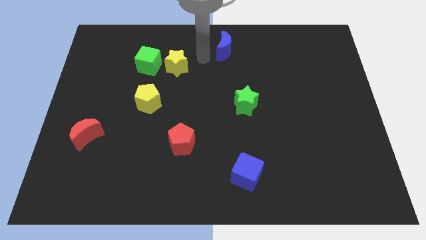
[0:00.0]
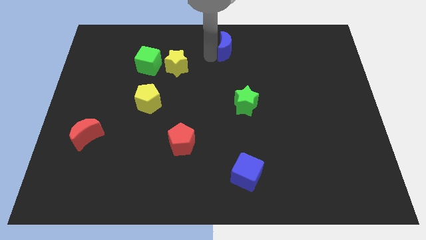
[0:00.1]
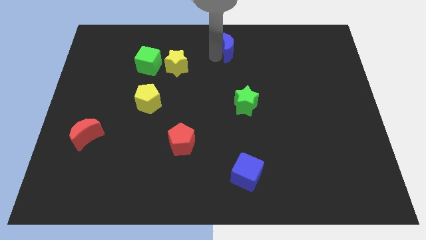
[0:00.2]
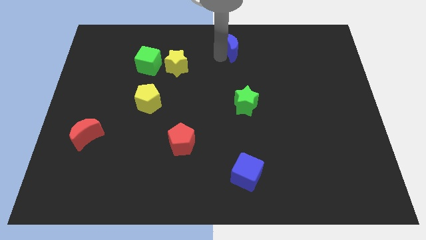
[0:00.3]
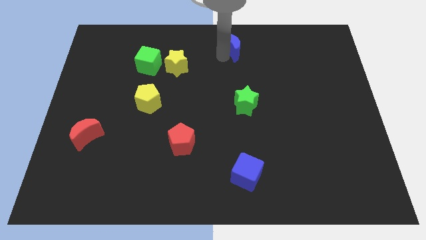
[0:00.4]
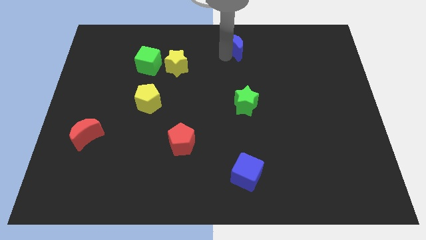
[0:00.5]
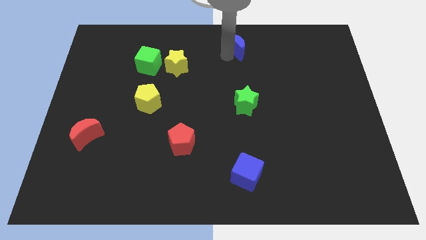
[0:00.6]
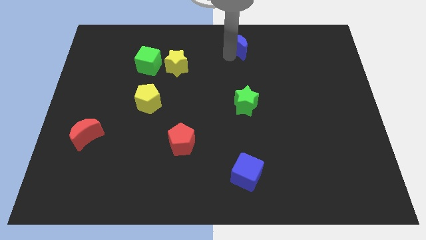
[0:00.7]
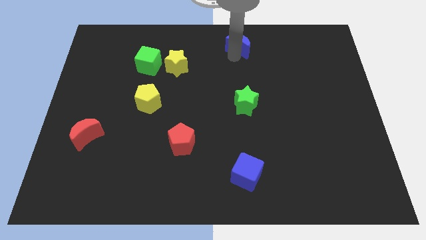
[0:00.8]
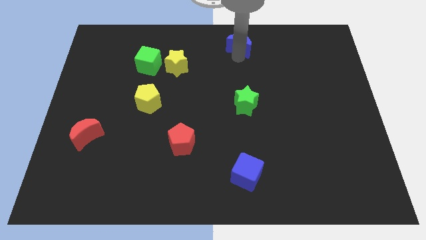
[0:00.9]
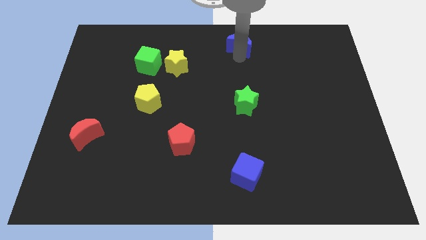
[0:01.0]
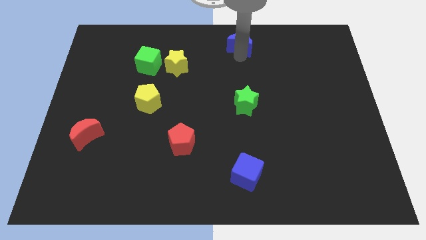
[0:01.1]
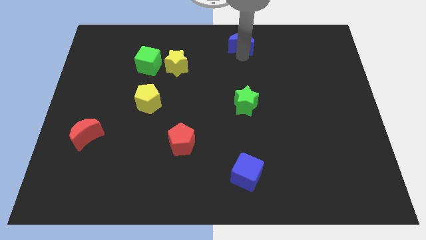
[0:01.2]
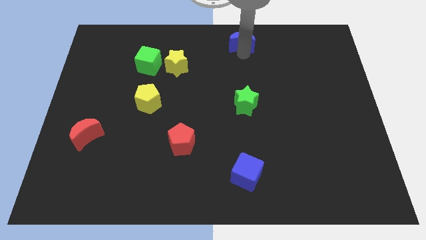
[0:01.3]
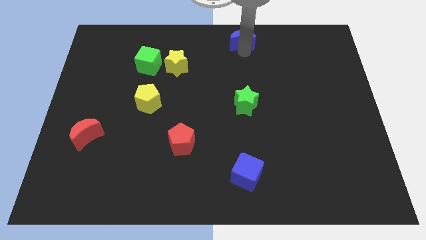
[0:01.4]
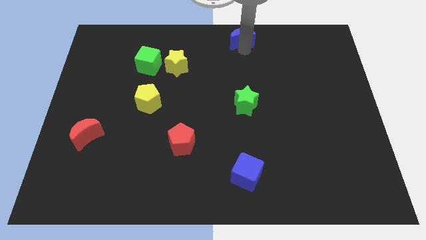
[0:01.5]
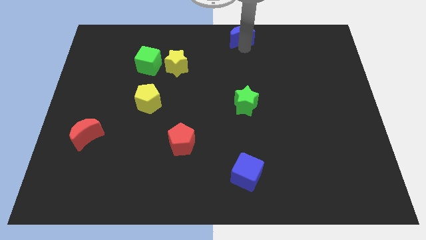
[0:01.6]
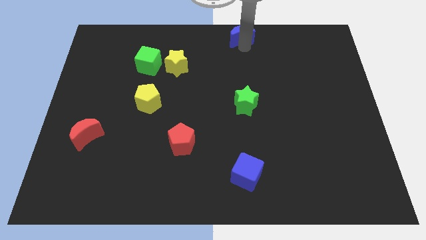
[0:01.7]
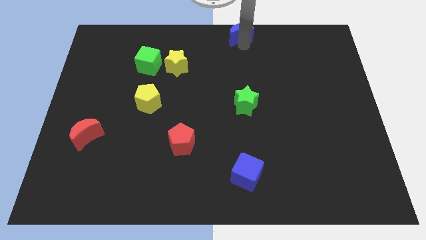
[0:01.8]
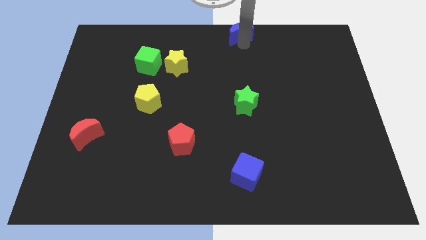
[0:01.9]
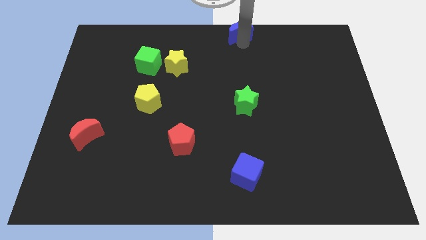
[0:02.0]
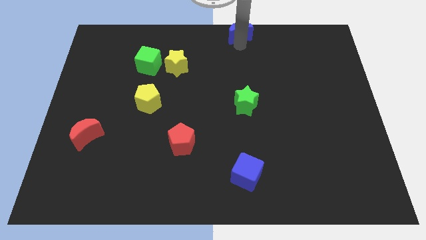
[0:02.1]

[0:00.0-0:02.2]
push blue moon to the top center of the board

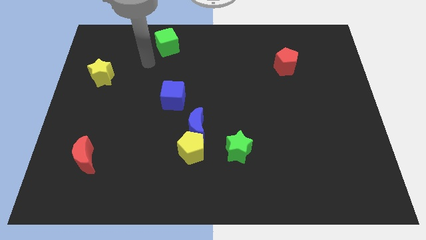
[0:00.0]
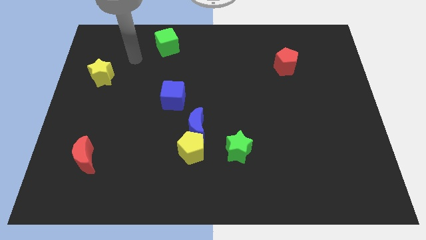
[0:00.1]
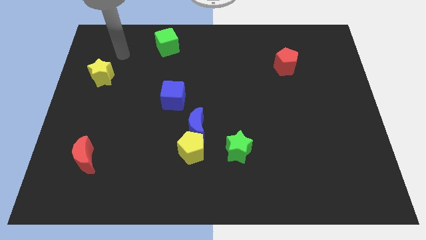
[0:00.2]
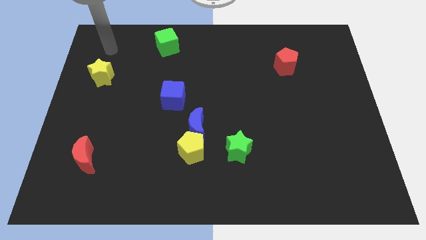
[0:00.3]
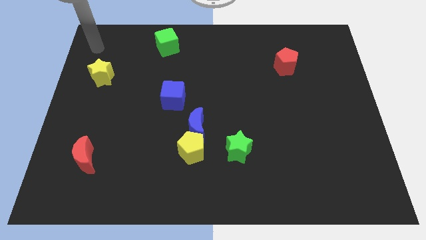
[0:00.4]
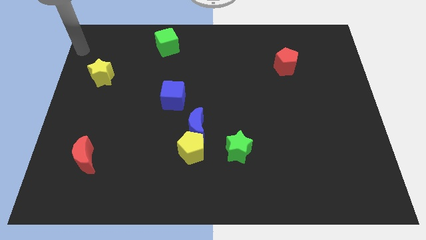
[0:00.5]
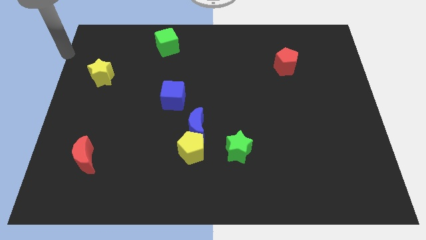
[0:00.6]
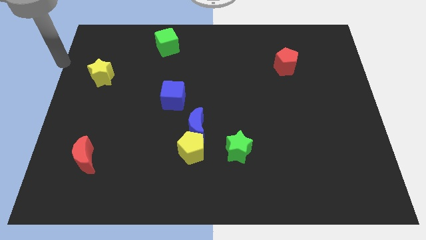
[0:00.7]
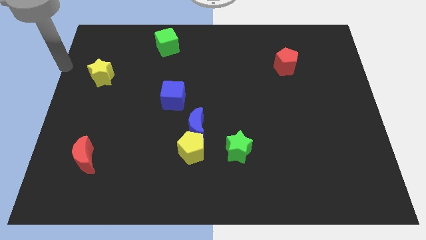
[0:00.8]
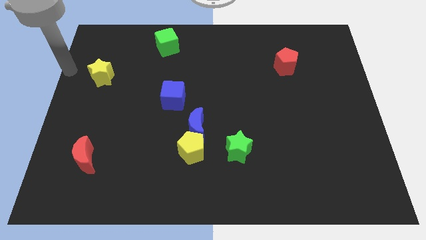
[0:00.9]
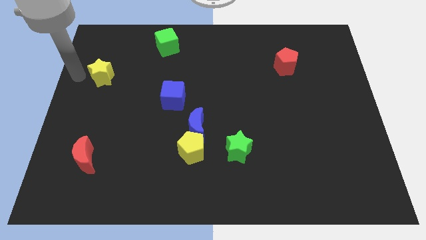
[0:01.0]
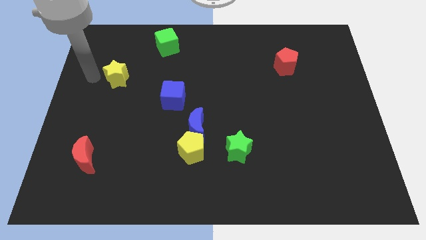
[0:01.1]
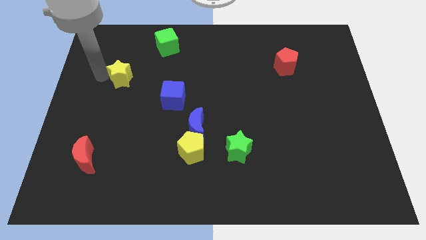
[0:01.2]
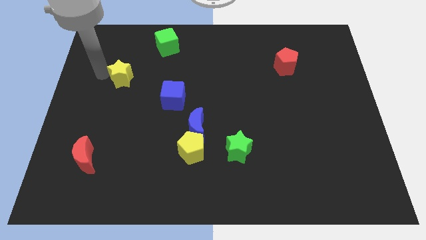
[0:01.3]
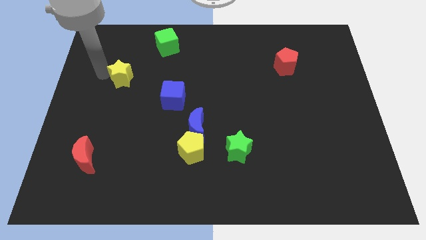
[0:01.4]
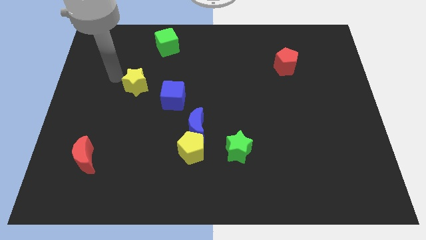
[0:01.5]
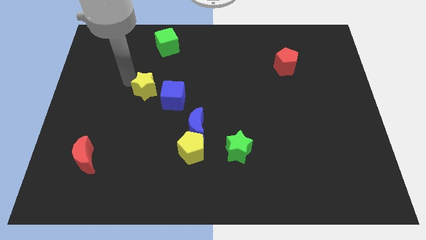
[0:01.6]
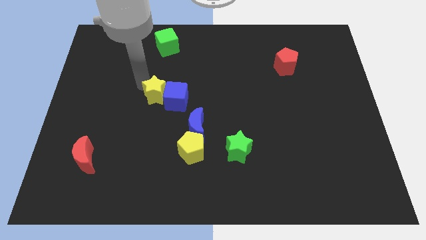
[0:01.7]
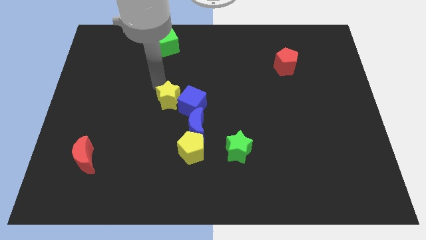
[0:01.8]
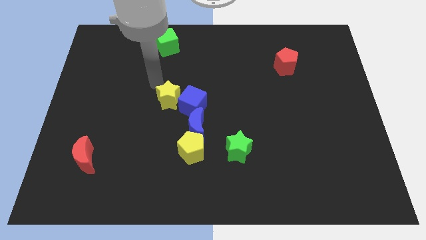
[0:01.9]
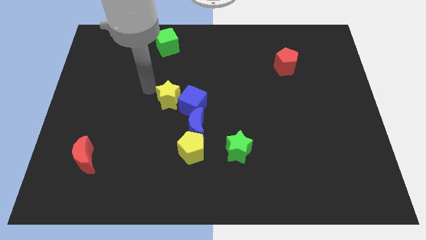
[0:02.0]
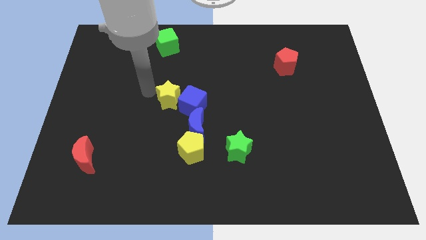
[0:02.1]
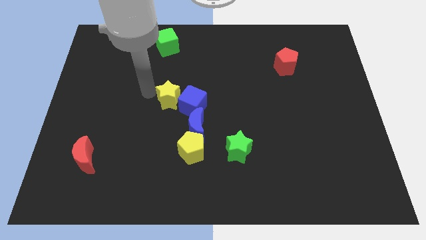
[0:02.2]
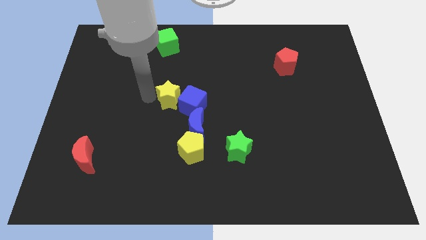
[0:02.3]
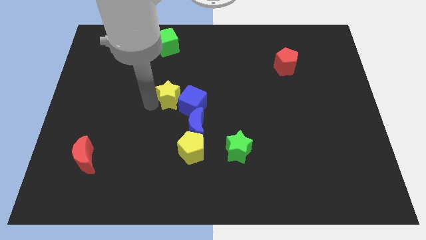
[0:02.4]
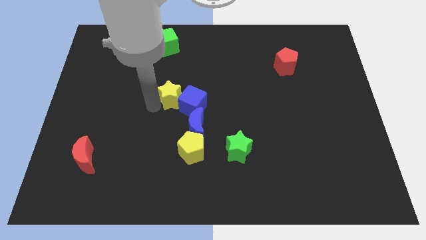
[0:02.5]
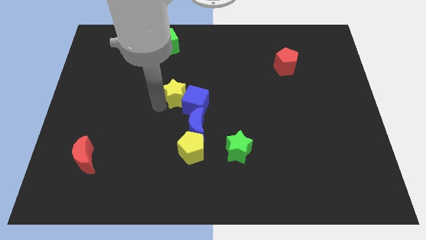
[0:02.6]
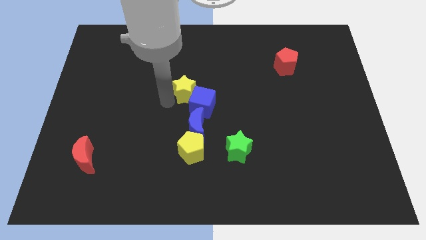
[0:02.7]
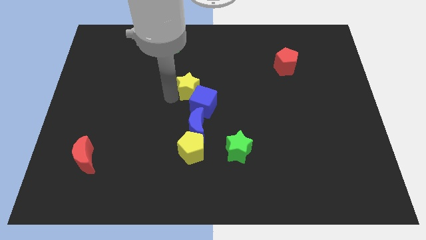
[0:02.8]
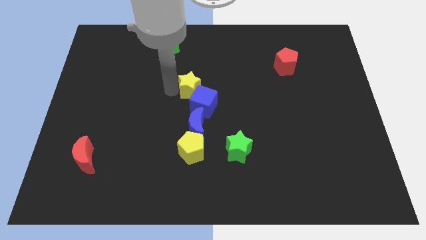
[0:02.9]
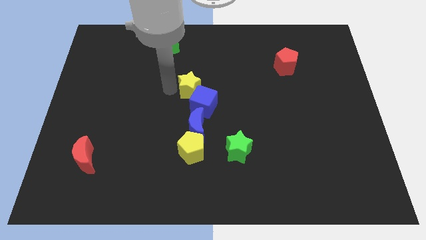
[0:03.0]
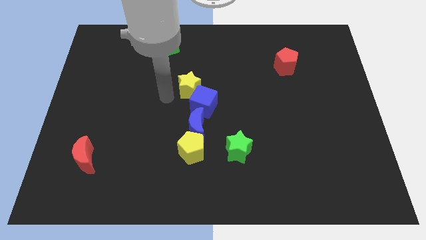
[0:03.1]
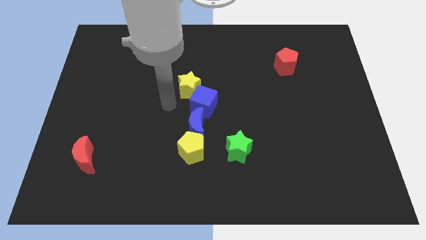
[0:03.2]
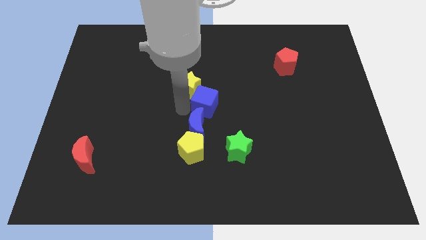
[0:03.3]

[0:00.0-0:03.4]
move the yellow star to the top left side of the blue cube

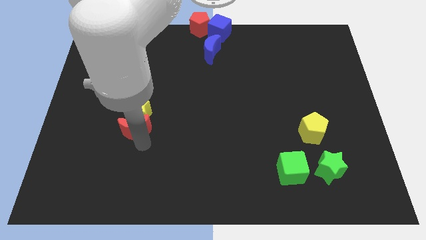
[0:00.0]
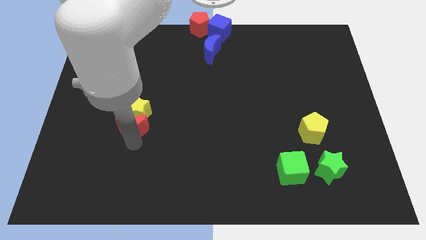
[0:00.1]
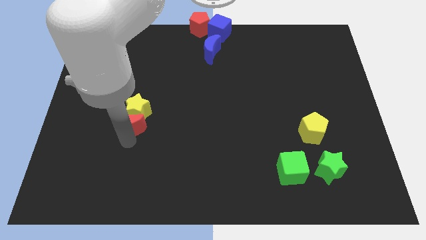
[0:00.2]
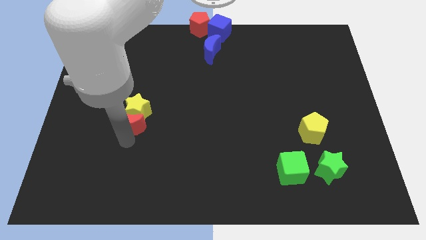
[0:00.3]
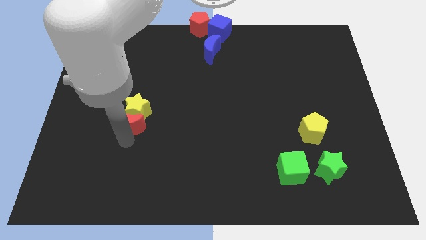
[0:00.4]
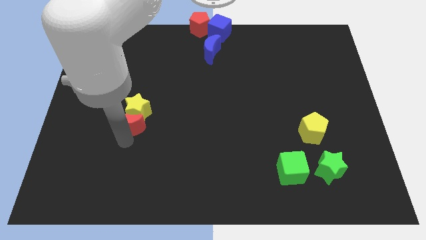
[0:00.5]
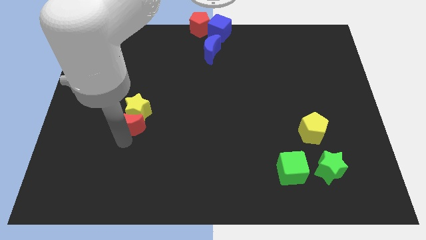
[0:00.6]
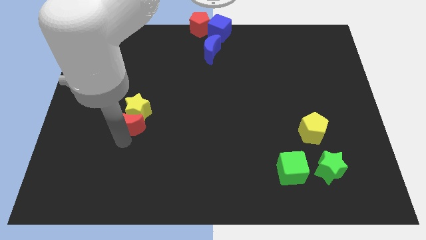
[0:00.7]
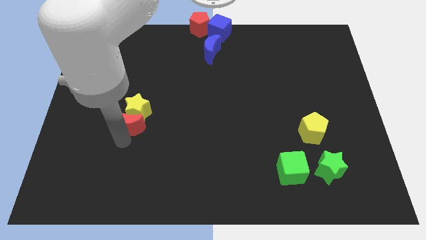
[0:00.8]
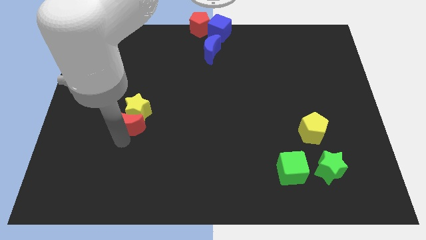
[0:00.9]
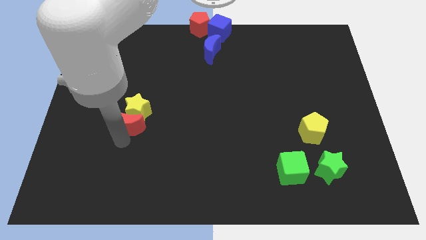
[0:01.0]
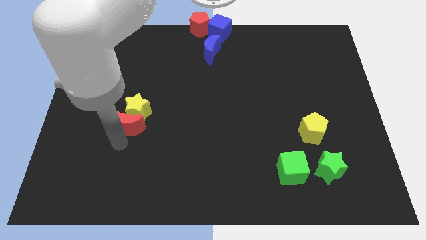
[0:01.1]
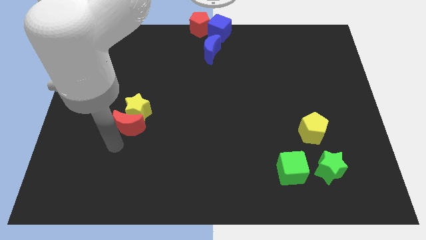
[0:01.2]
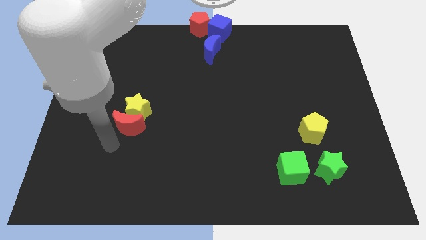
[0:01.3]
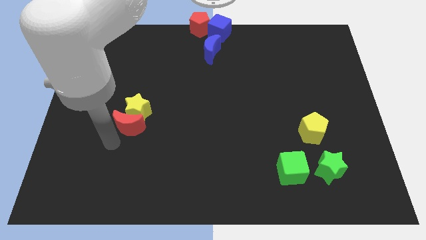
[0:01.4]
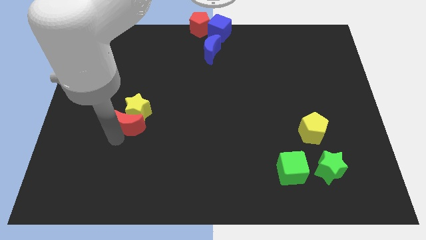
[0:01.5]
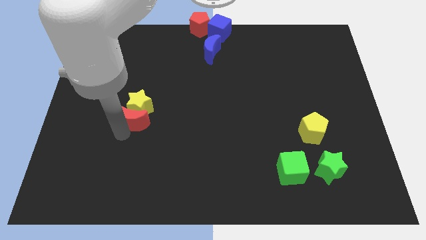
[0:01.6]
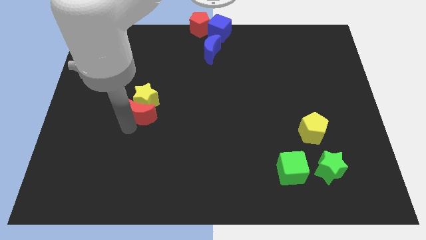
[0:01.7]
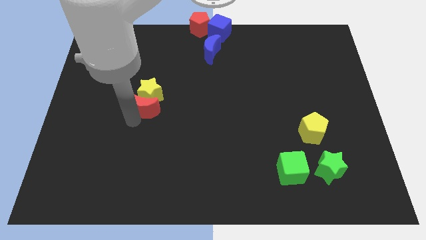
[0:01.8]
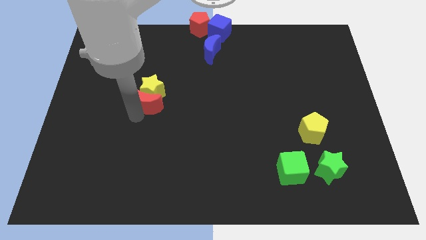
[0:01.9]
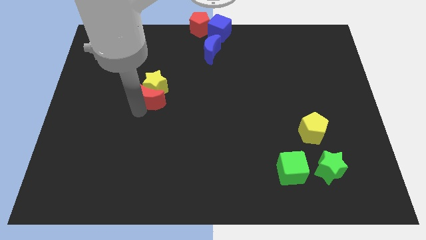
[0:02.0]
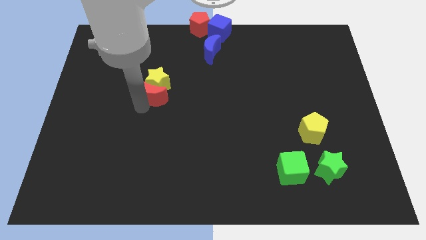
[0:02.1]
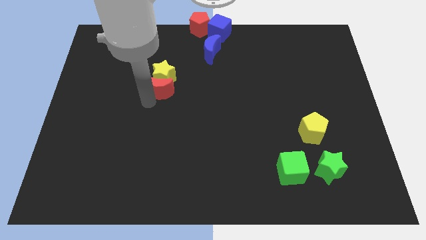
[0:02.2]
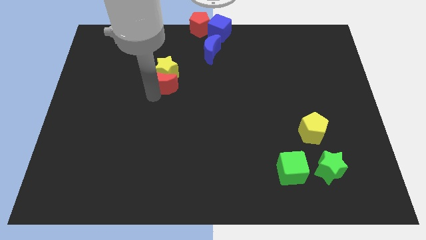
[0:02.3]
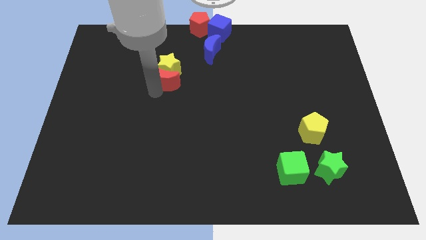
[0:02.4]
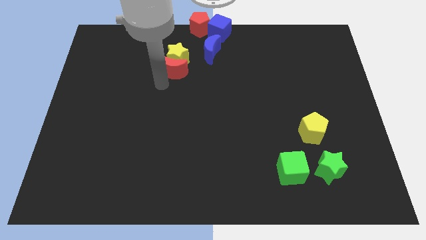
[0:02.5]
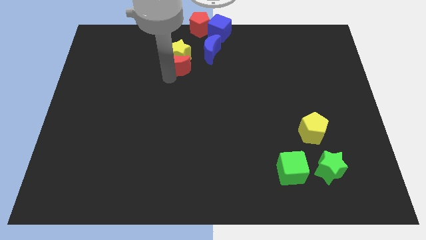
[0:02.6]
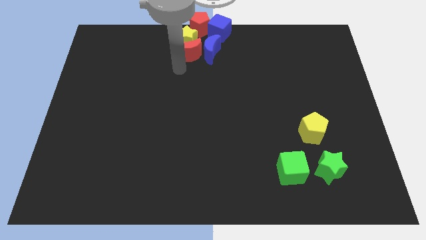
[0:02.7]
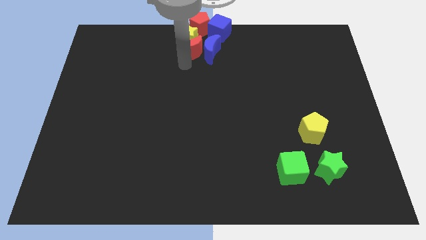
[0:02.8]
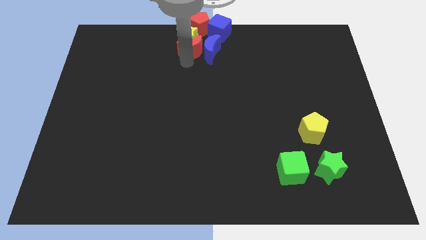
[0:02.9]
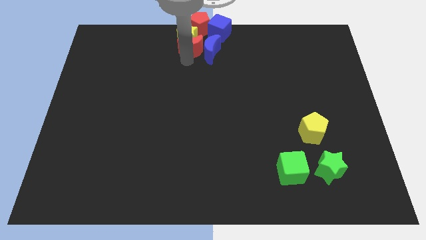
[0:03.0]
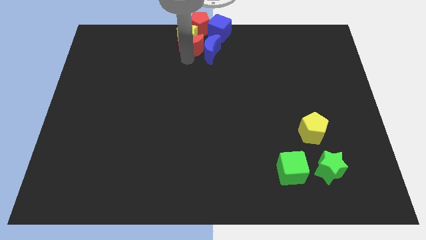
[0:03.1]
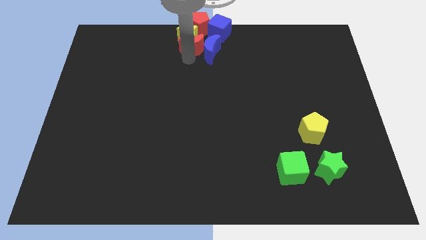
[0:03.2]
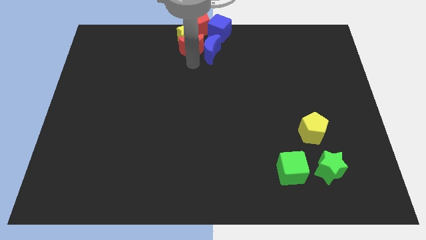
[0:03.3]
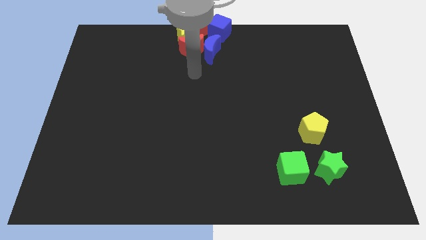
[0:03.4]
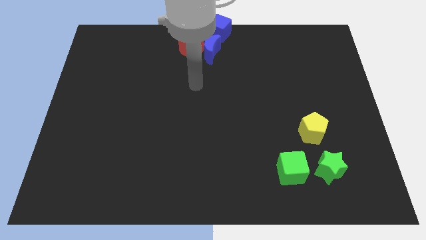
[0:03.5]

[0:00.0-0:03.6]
move red crescent along with yellow star to center
